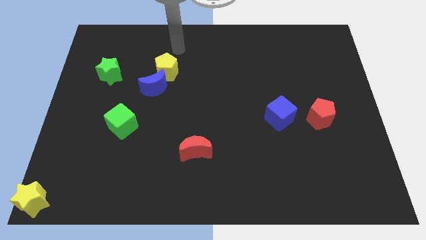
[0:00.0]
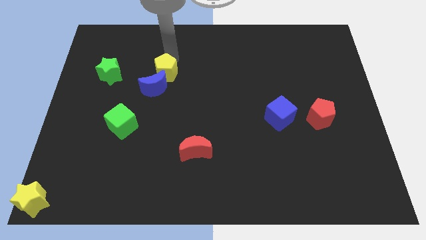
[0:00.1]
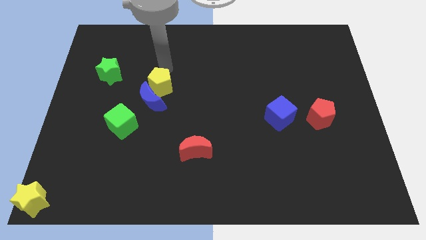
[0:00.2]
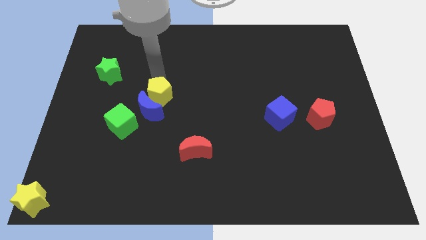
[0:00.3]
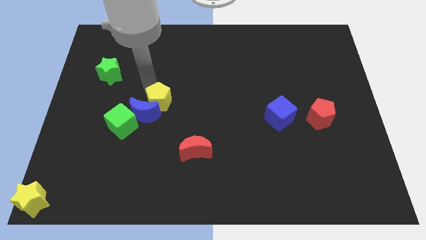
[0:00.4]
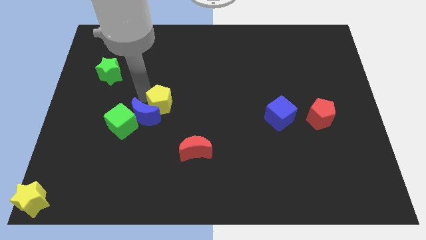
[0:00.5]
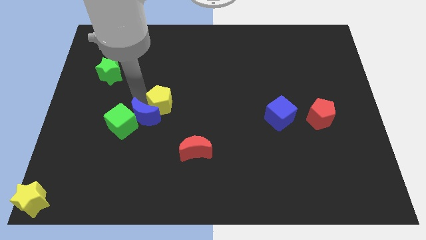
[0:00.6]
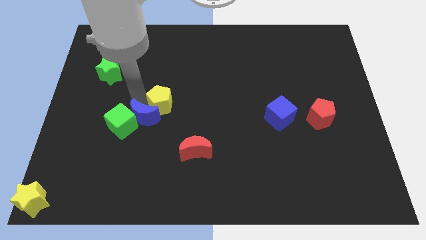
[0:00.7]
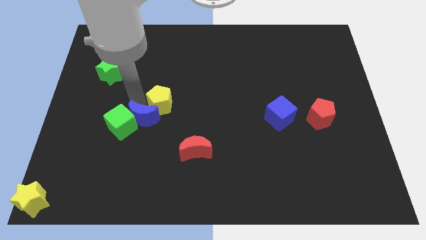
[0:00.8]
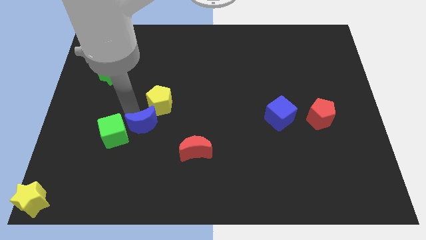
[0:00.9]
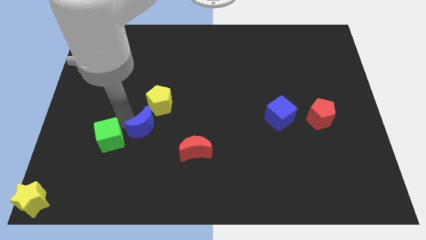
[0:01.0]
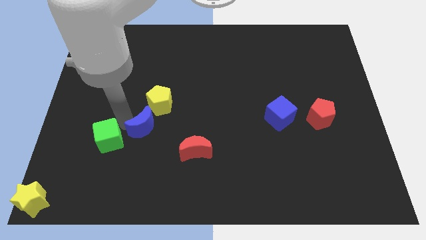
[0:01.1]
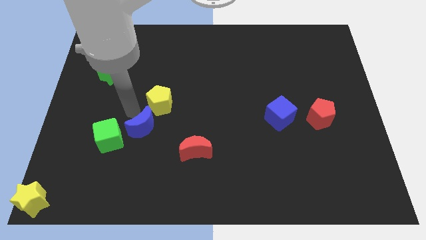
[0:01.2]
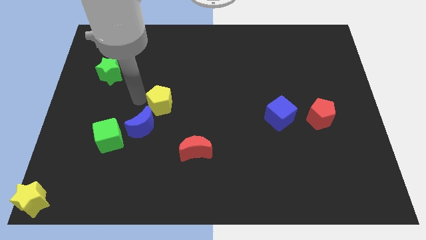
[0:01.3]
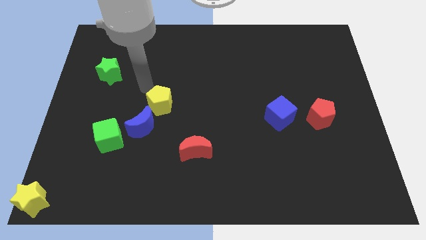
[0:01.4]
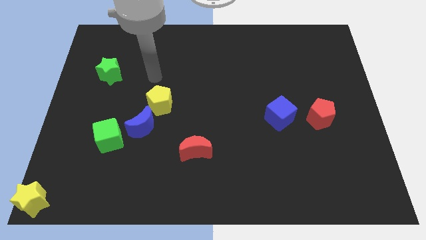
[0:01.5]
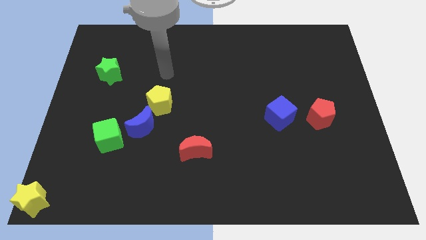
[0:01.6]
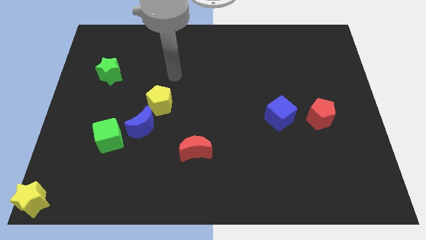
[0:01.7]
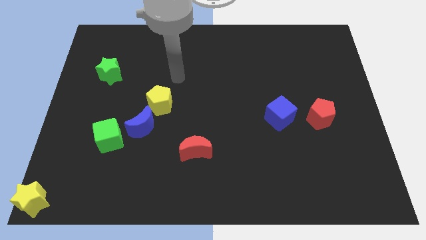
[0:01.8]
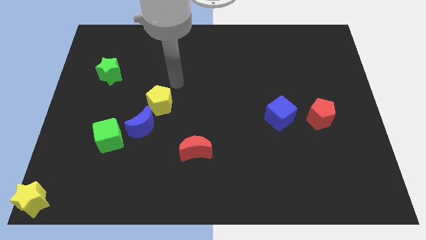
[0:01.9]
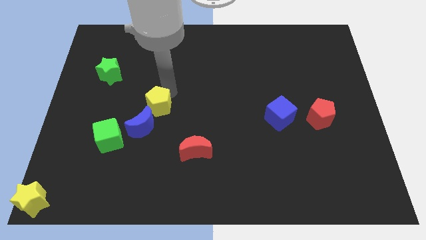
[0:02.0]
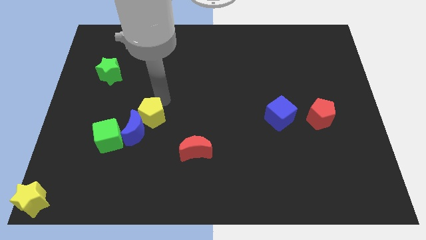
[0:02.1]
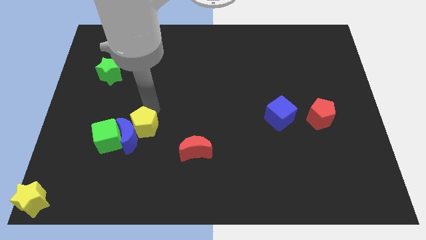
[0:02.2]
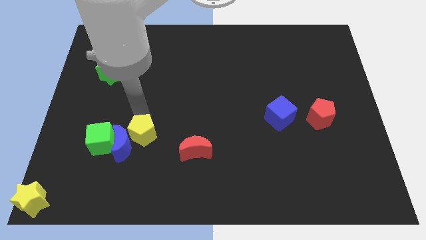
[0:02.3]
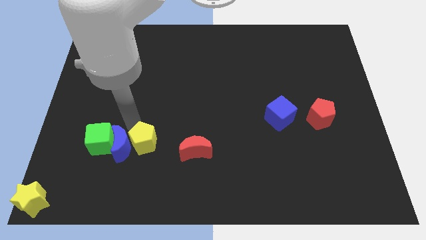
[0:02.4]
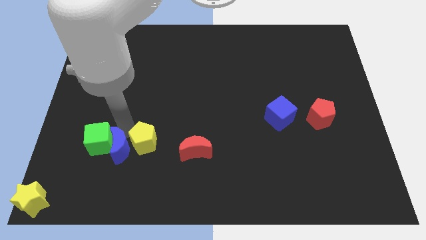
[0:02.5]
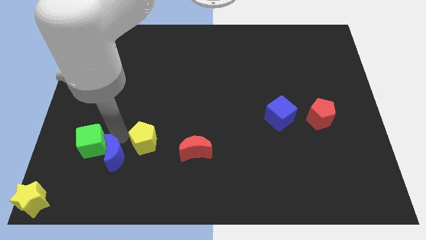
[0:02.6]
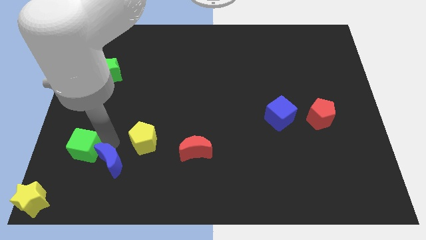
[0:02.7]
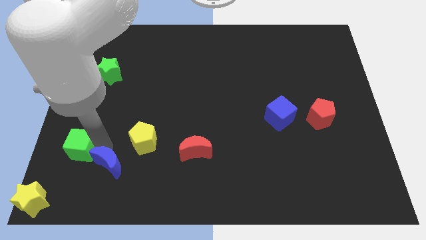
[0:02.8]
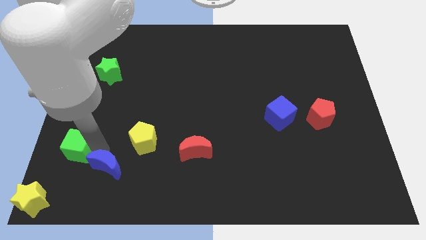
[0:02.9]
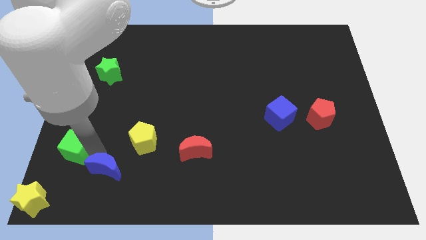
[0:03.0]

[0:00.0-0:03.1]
drag the yellow pentagon blue moon into the green cube

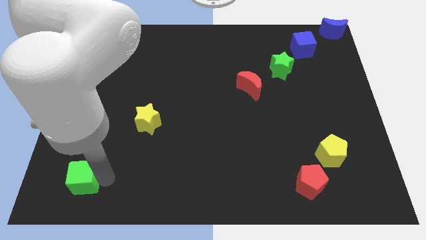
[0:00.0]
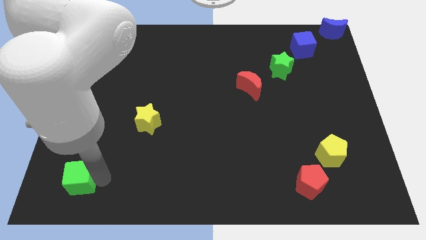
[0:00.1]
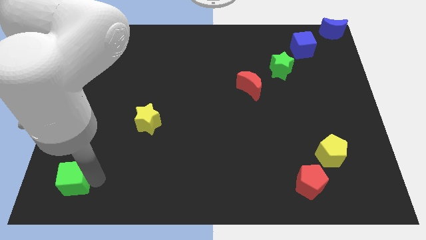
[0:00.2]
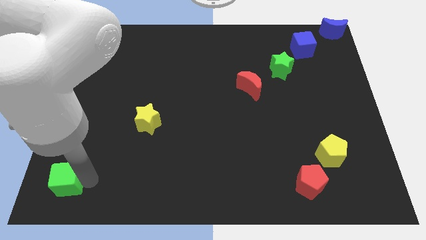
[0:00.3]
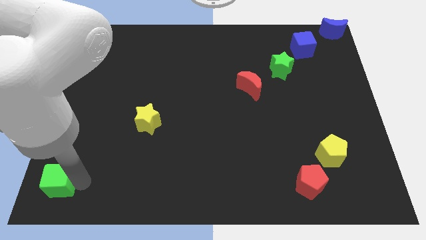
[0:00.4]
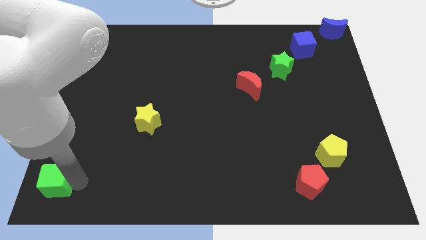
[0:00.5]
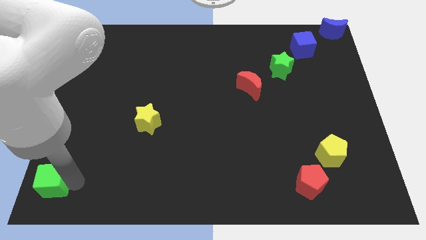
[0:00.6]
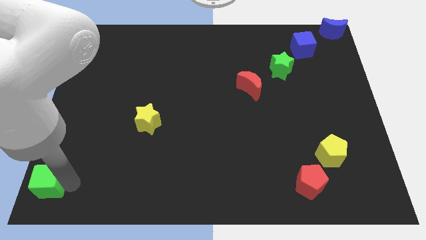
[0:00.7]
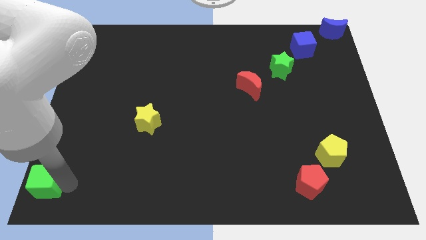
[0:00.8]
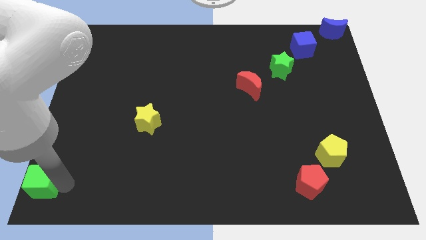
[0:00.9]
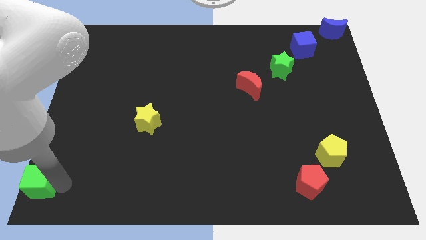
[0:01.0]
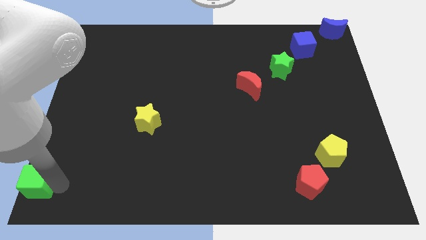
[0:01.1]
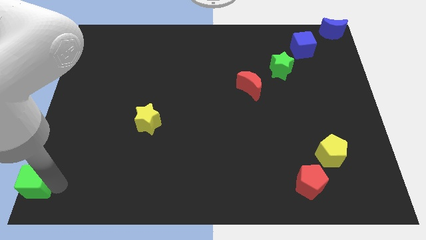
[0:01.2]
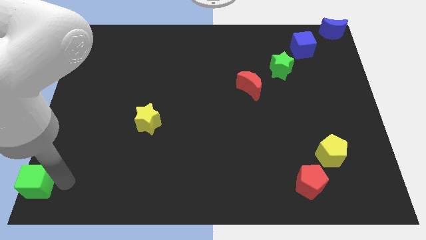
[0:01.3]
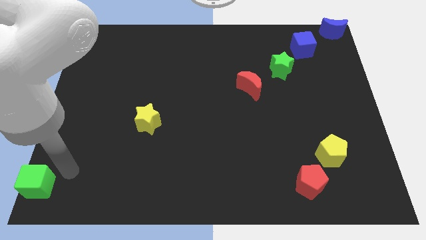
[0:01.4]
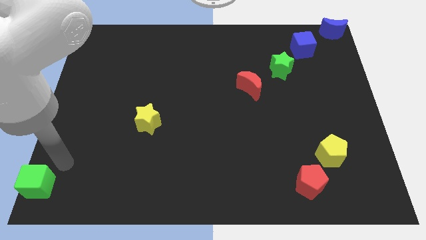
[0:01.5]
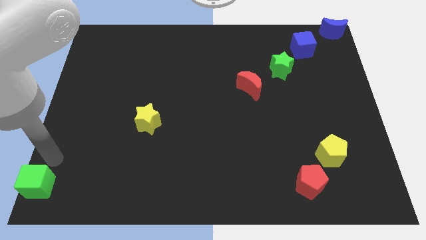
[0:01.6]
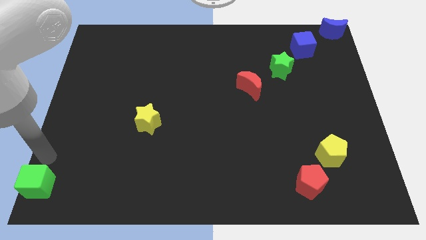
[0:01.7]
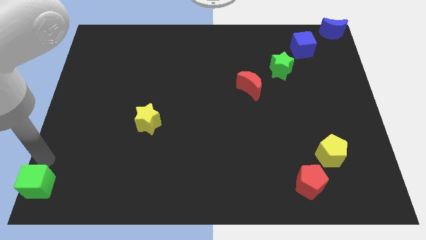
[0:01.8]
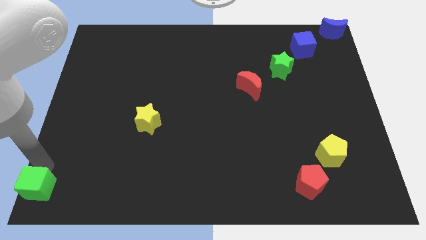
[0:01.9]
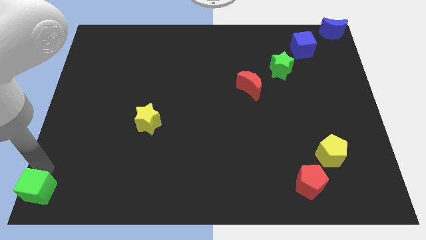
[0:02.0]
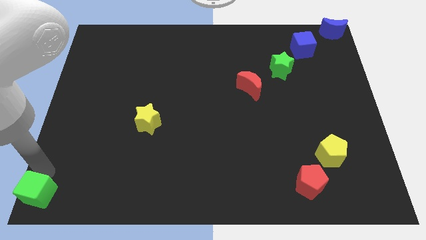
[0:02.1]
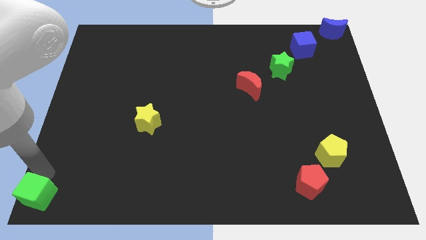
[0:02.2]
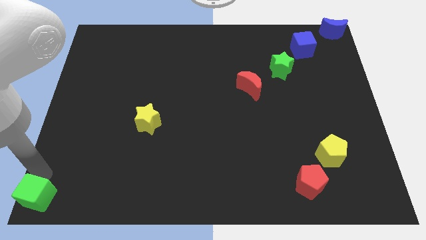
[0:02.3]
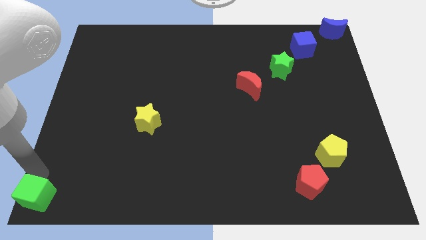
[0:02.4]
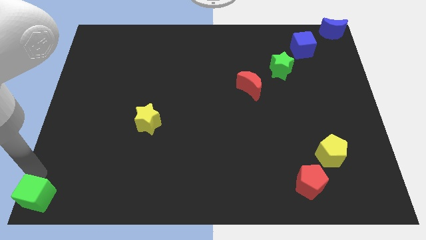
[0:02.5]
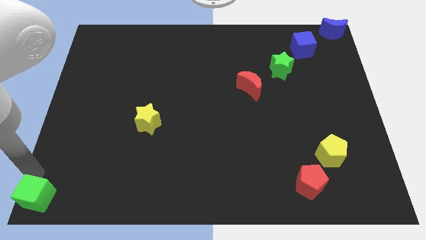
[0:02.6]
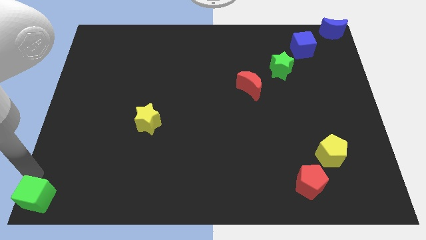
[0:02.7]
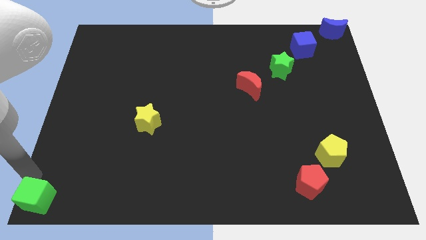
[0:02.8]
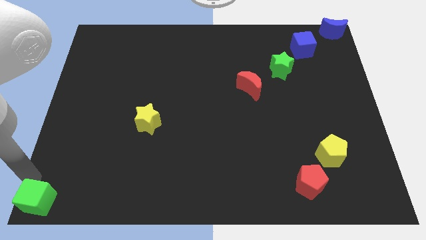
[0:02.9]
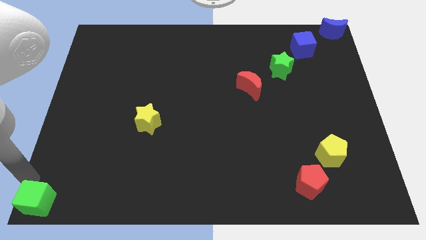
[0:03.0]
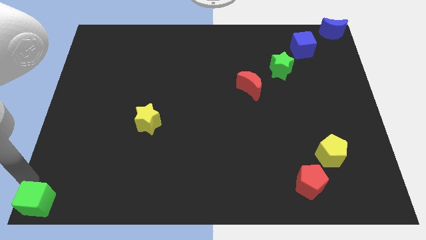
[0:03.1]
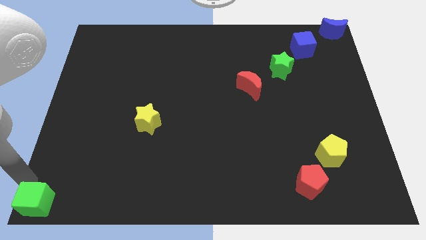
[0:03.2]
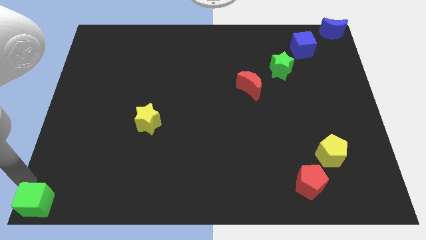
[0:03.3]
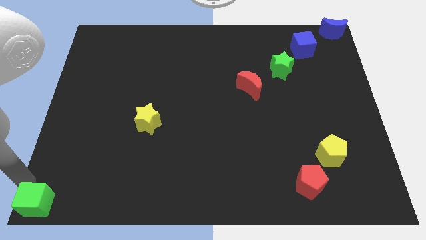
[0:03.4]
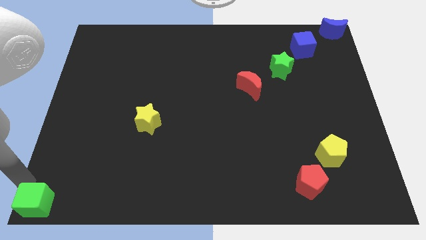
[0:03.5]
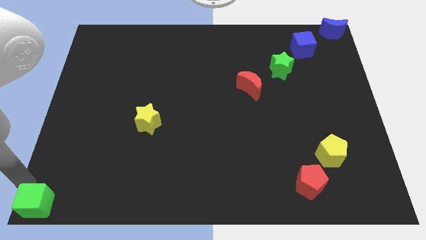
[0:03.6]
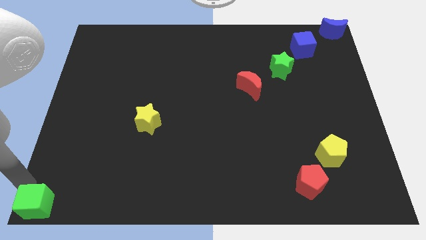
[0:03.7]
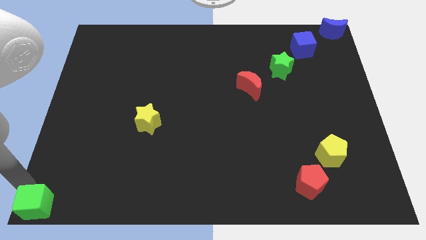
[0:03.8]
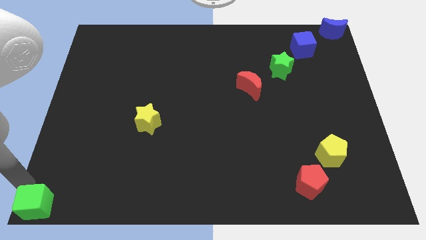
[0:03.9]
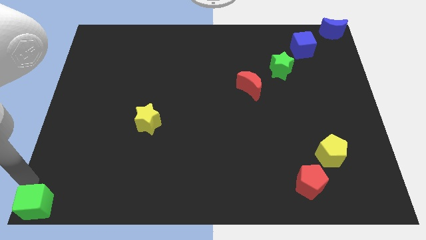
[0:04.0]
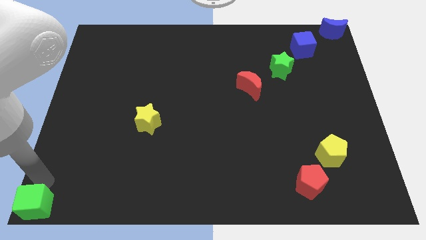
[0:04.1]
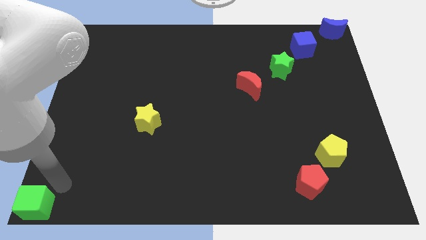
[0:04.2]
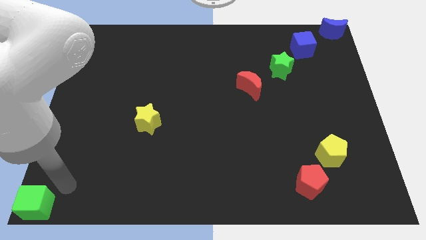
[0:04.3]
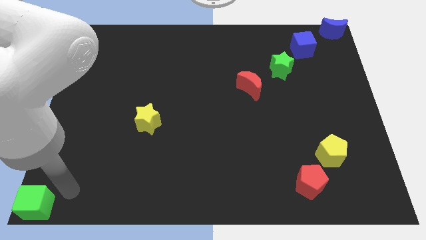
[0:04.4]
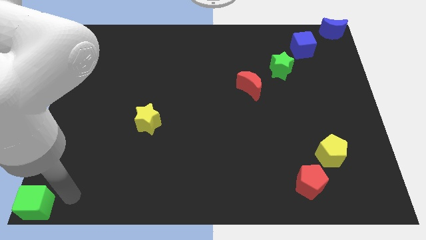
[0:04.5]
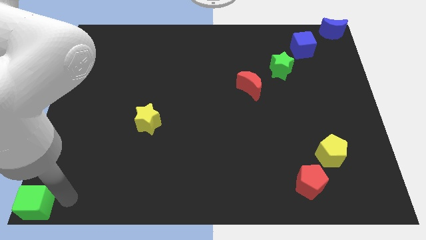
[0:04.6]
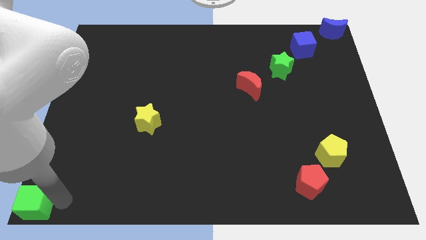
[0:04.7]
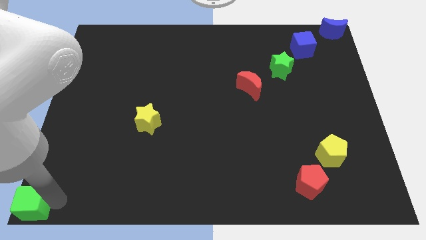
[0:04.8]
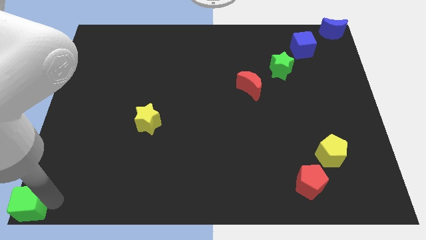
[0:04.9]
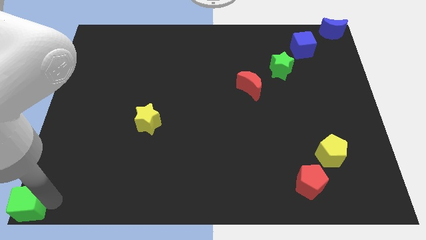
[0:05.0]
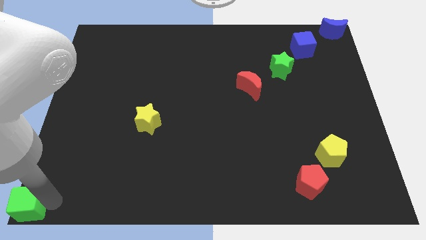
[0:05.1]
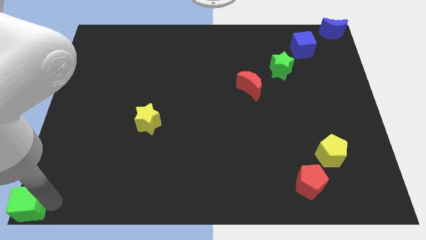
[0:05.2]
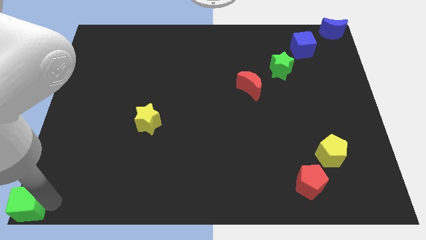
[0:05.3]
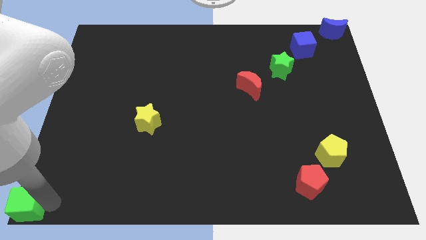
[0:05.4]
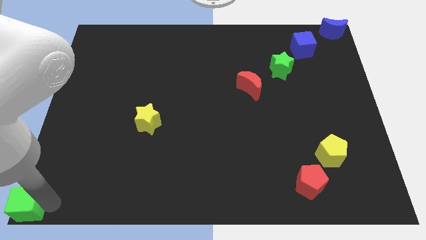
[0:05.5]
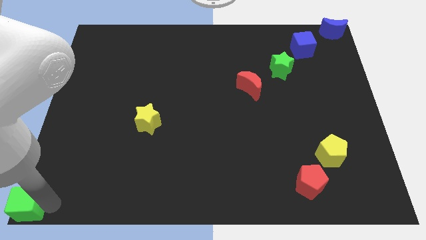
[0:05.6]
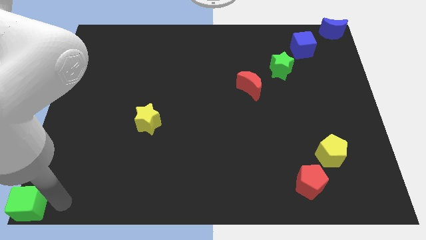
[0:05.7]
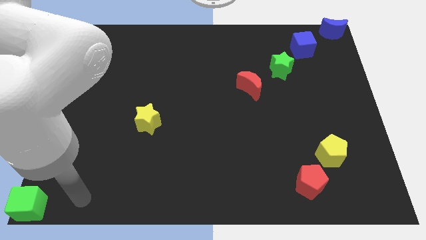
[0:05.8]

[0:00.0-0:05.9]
place the green cube at the bottom left corner of the board

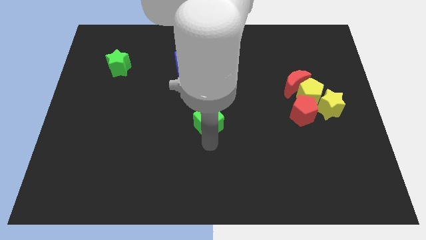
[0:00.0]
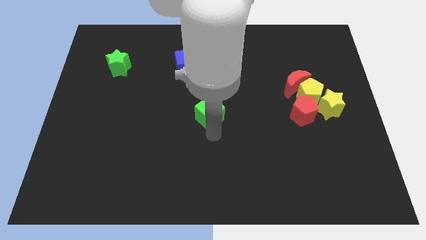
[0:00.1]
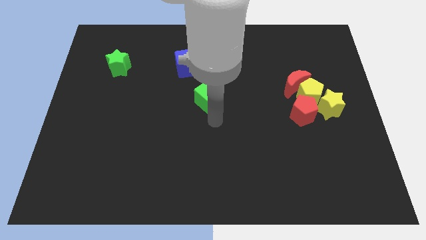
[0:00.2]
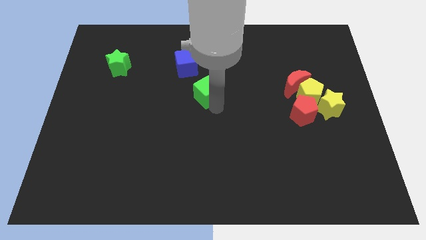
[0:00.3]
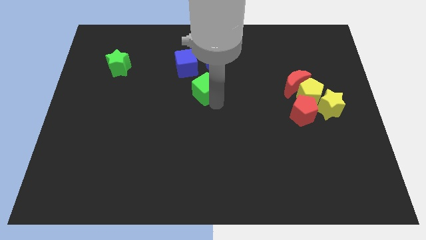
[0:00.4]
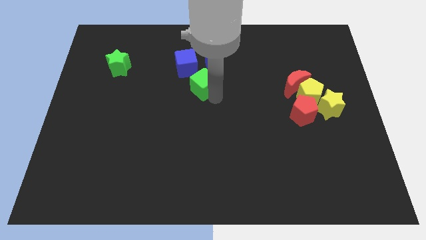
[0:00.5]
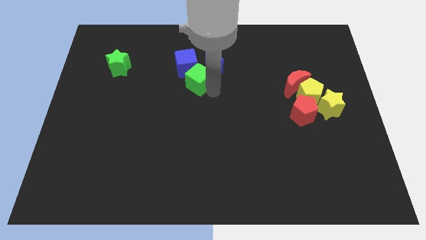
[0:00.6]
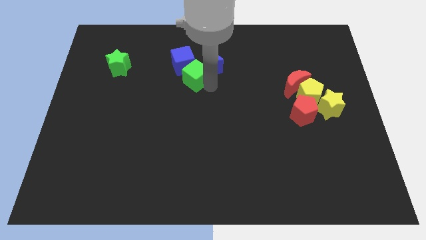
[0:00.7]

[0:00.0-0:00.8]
push green cube below blue cube
